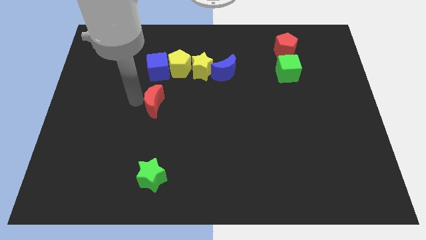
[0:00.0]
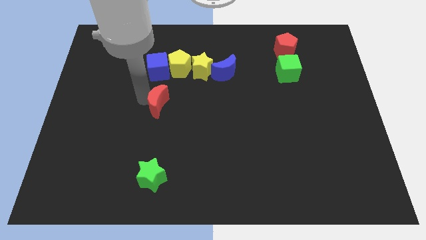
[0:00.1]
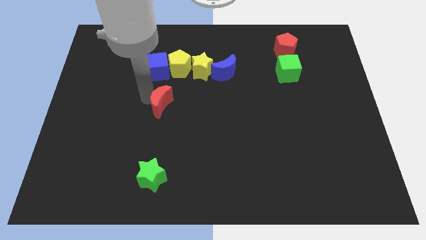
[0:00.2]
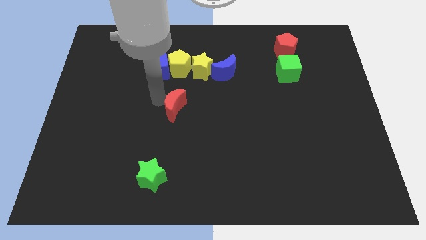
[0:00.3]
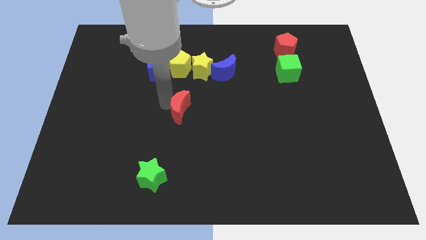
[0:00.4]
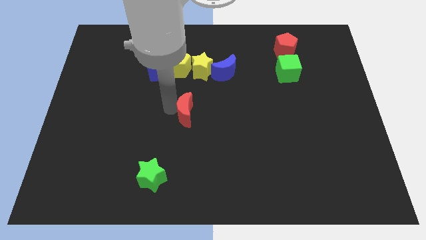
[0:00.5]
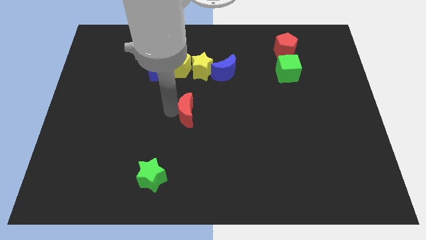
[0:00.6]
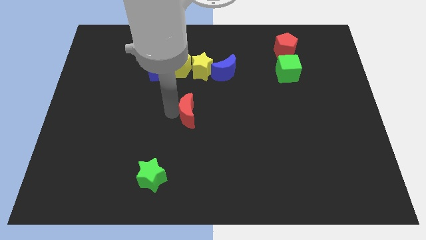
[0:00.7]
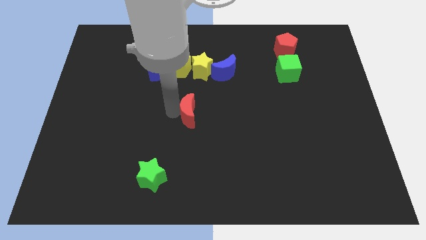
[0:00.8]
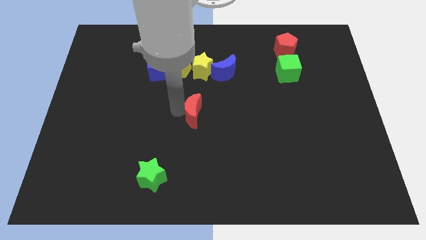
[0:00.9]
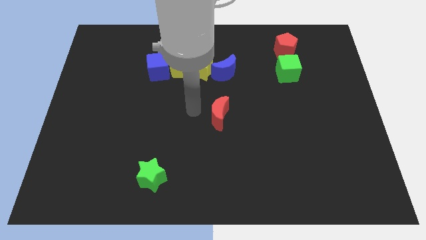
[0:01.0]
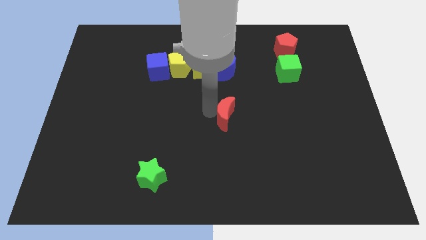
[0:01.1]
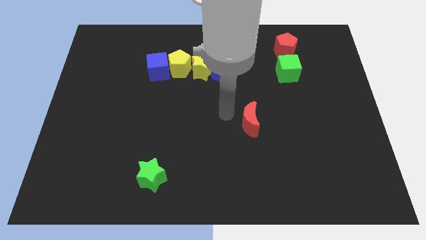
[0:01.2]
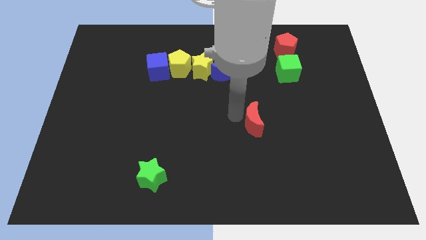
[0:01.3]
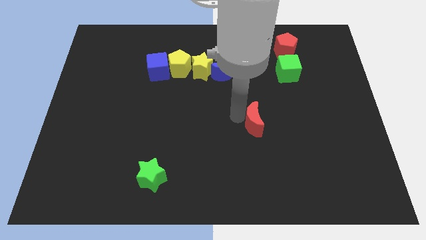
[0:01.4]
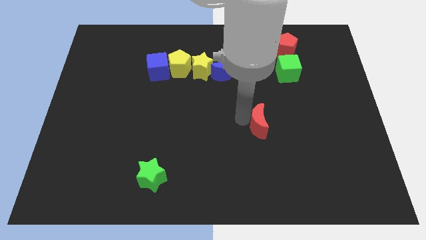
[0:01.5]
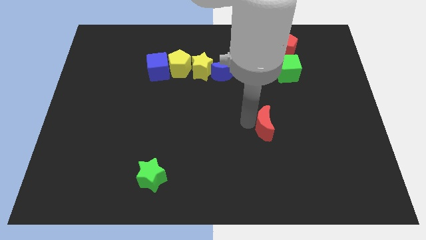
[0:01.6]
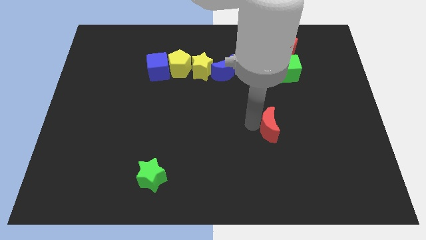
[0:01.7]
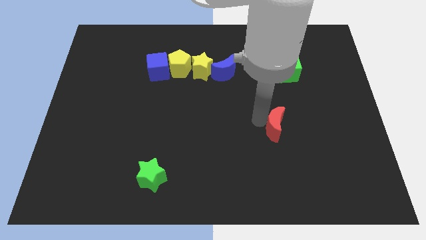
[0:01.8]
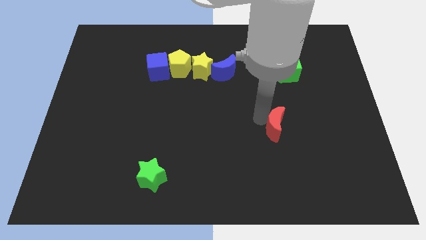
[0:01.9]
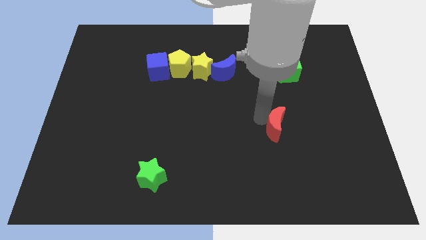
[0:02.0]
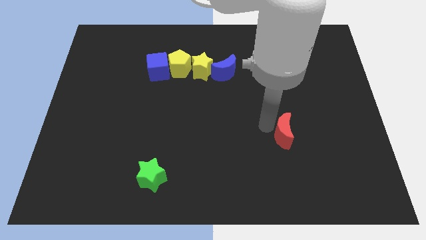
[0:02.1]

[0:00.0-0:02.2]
place the red moon towards the center of the board

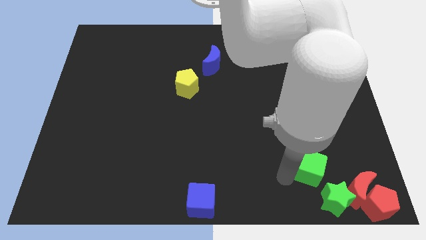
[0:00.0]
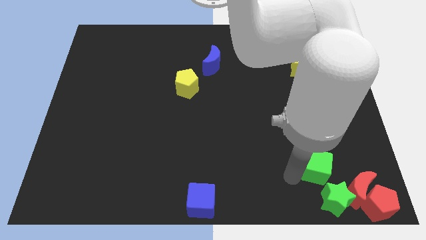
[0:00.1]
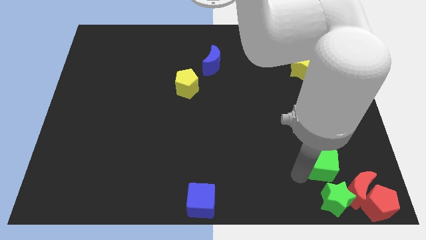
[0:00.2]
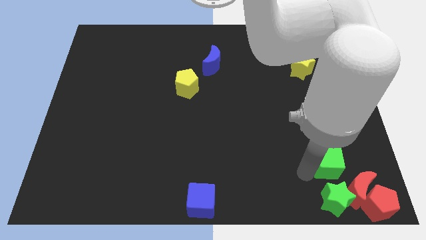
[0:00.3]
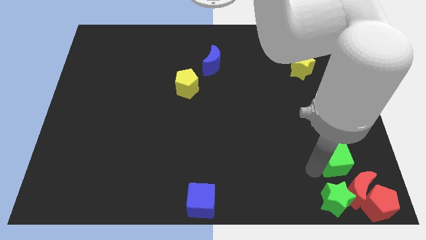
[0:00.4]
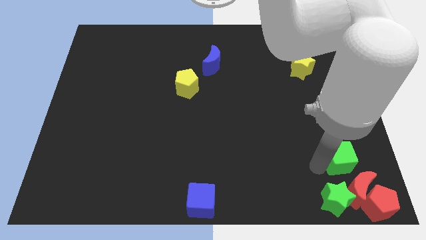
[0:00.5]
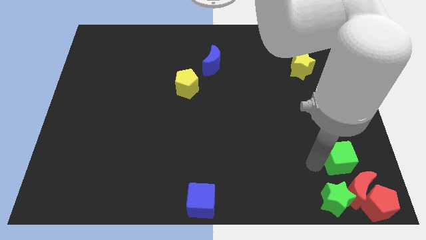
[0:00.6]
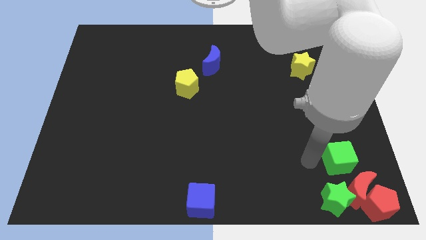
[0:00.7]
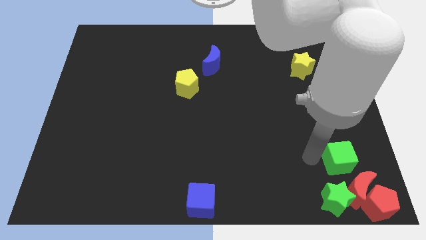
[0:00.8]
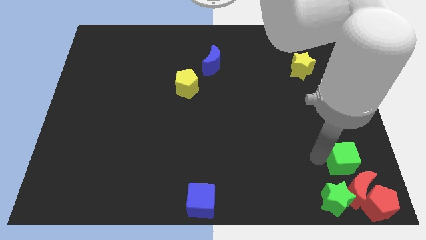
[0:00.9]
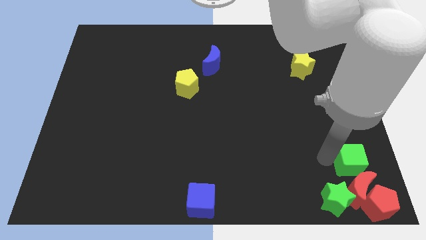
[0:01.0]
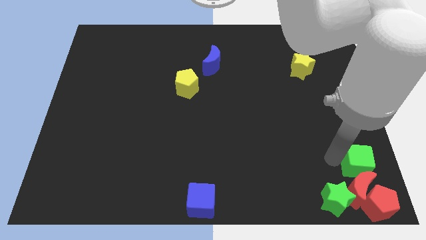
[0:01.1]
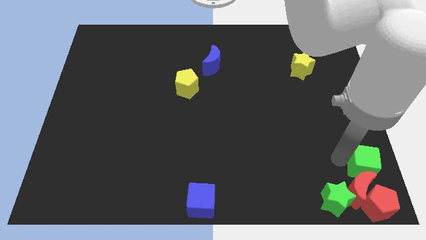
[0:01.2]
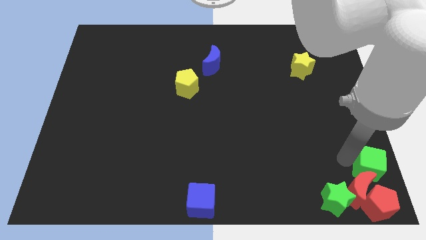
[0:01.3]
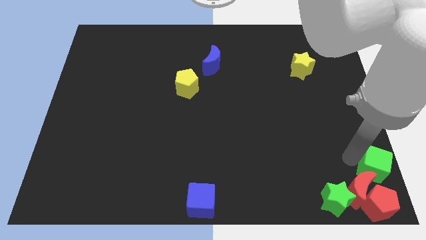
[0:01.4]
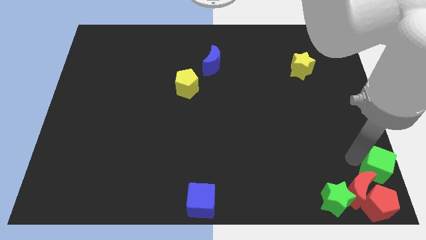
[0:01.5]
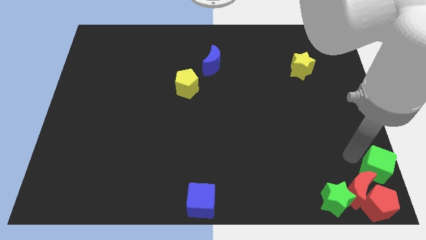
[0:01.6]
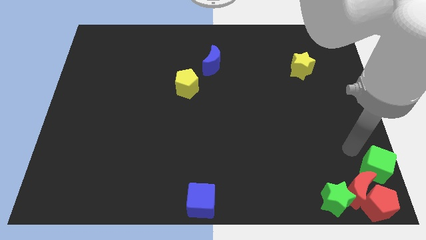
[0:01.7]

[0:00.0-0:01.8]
push the green cube towards the group of blocks

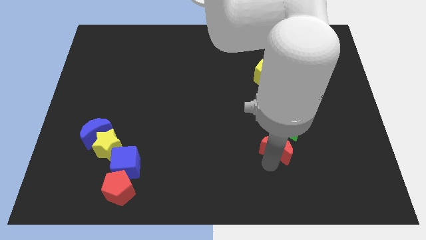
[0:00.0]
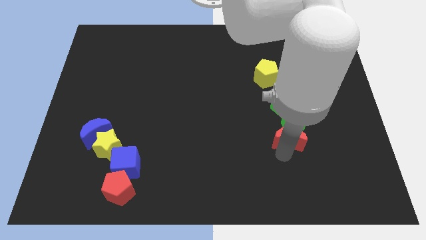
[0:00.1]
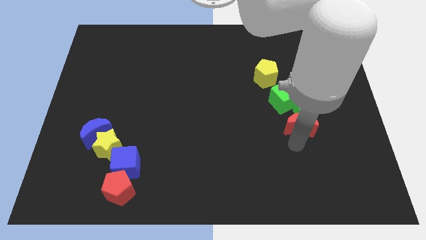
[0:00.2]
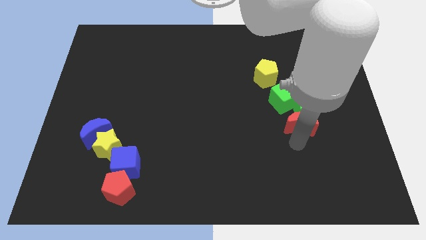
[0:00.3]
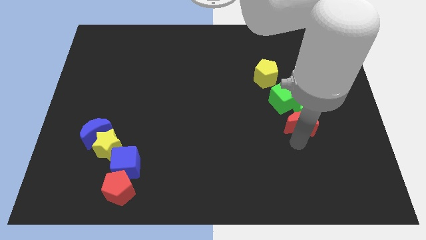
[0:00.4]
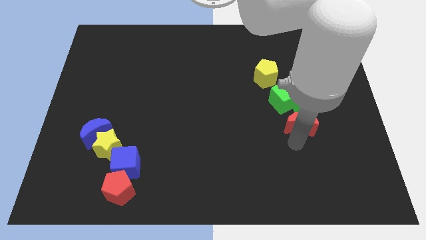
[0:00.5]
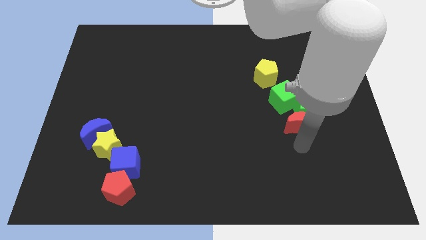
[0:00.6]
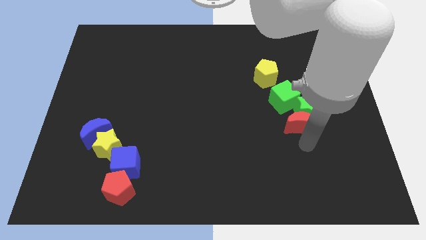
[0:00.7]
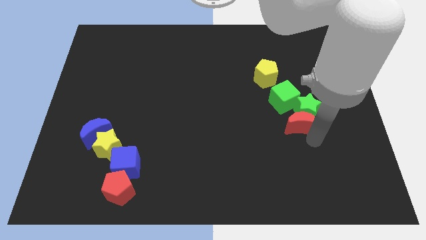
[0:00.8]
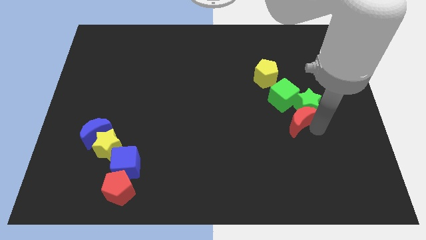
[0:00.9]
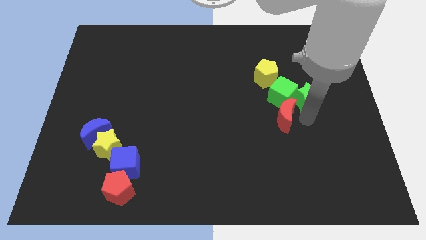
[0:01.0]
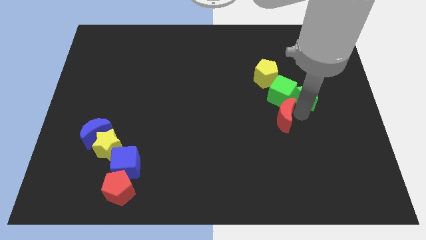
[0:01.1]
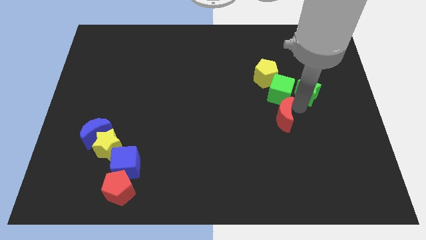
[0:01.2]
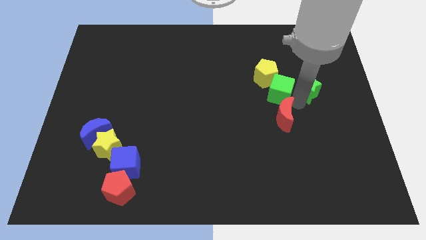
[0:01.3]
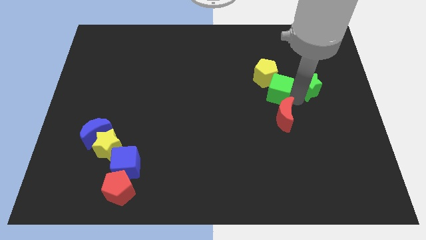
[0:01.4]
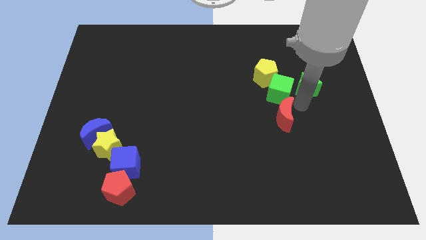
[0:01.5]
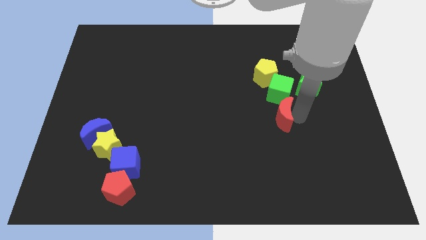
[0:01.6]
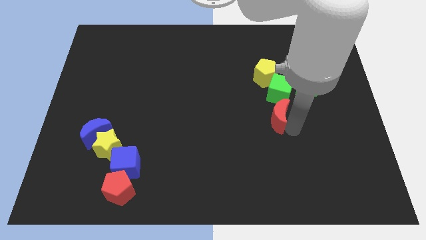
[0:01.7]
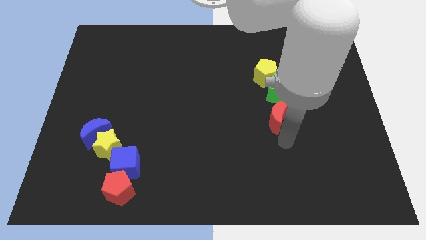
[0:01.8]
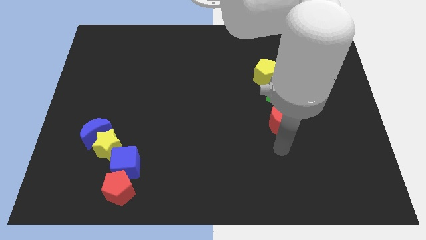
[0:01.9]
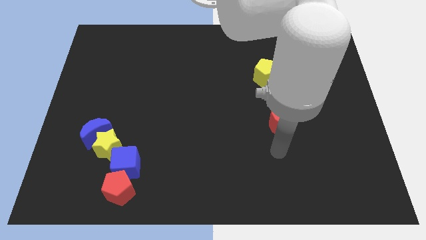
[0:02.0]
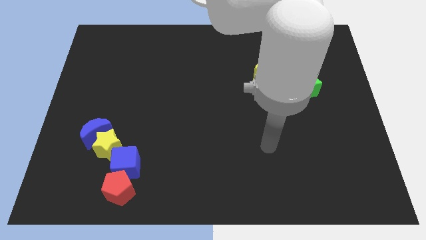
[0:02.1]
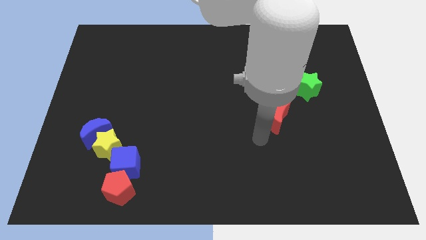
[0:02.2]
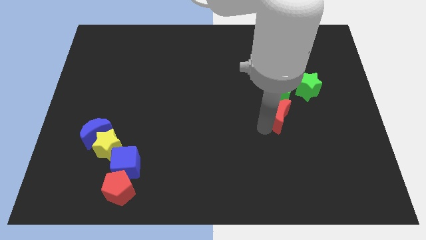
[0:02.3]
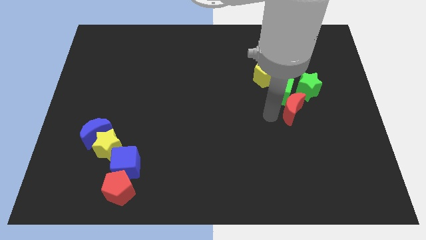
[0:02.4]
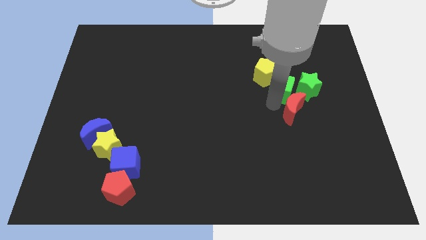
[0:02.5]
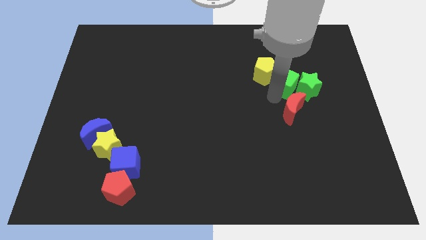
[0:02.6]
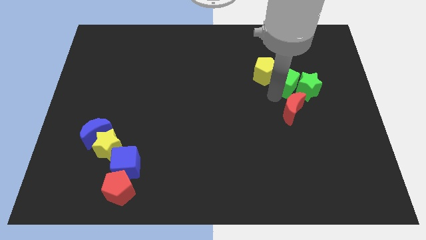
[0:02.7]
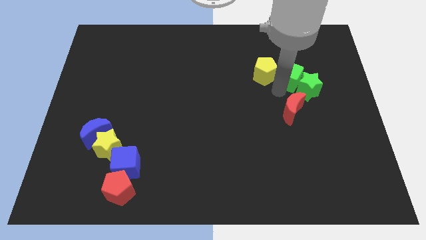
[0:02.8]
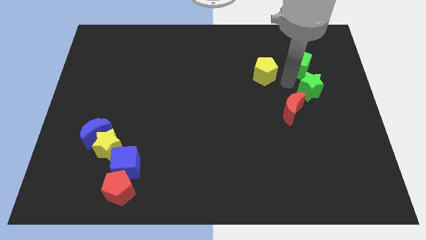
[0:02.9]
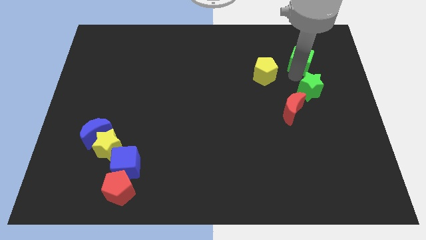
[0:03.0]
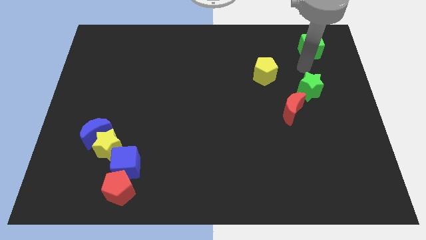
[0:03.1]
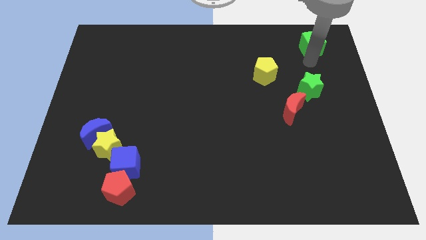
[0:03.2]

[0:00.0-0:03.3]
push the red crescent into the green star and move the green cube away from the green star

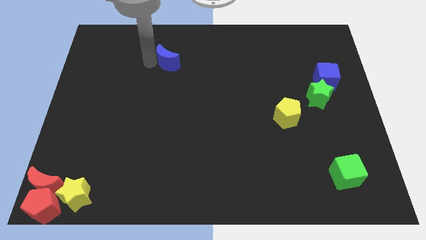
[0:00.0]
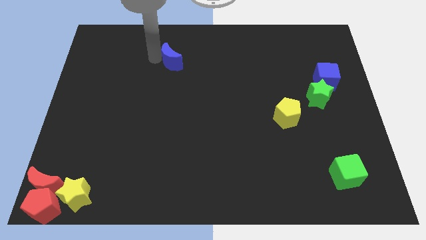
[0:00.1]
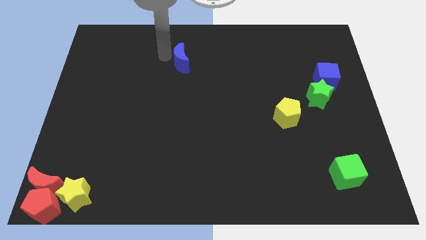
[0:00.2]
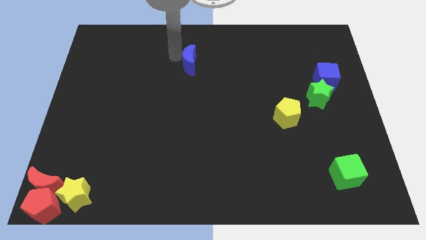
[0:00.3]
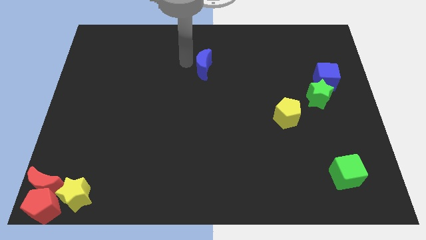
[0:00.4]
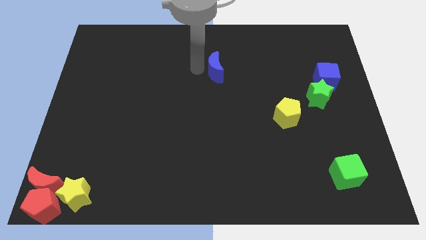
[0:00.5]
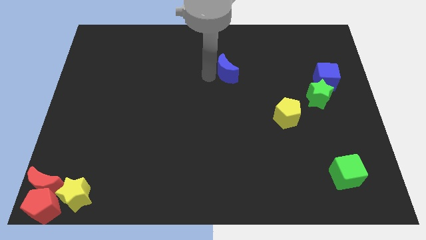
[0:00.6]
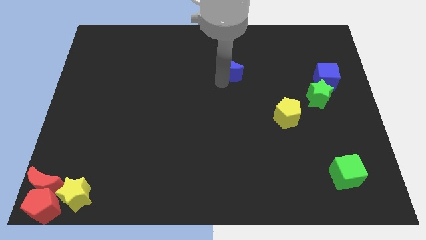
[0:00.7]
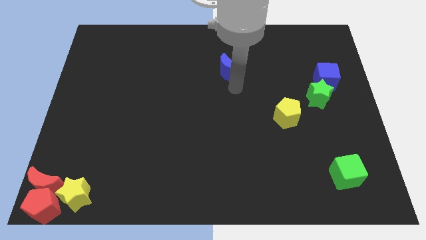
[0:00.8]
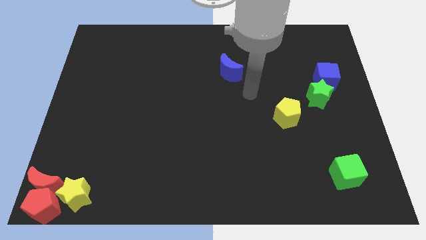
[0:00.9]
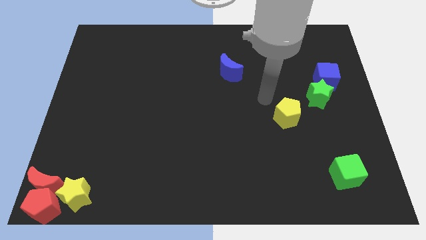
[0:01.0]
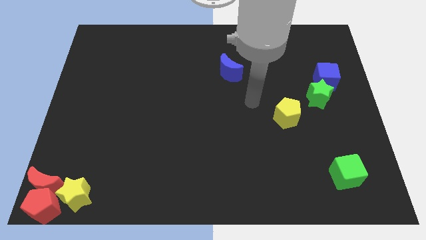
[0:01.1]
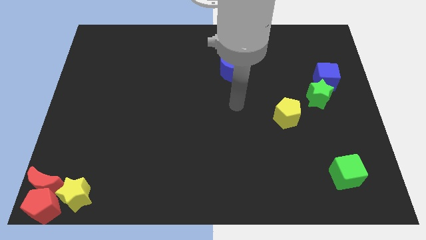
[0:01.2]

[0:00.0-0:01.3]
push the blue moon diagonally top left to yellow pentagon

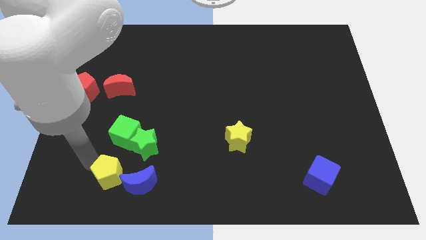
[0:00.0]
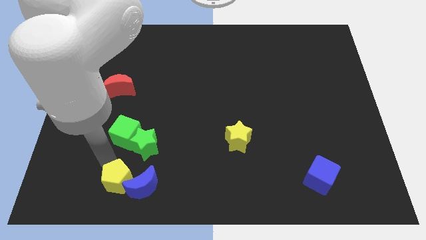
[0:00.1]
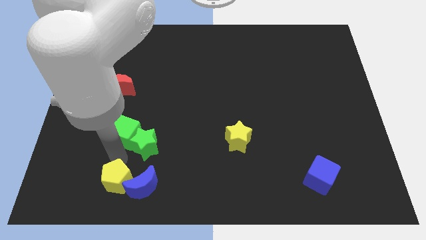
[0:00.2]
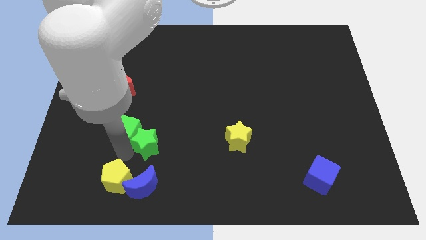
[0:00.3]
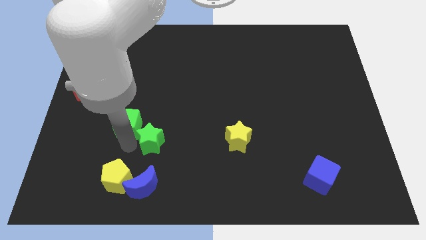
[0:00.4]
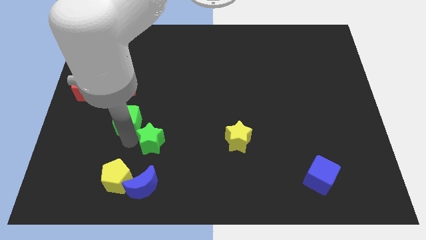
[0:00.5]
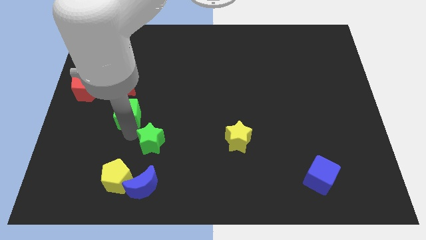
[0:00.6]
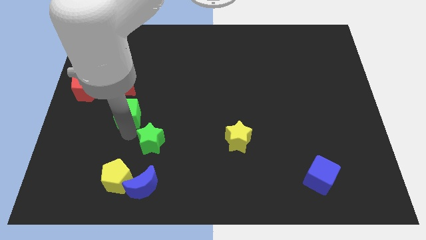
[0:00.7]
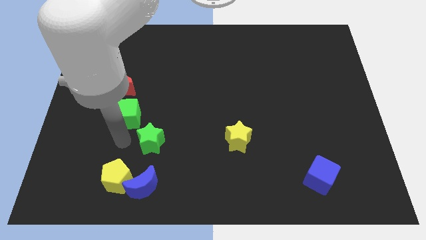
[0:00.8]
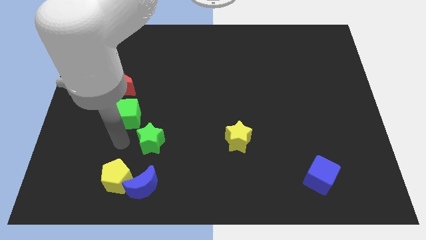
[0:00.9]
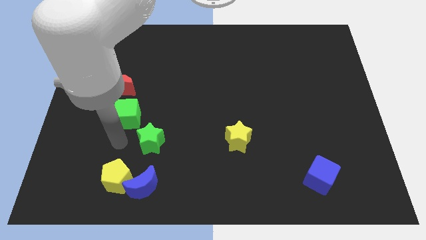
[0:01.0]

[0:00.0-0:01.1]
push the green cube into the red crescent
